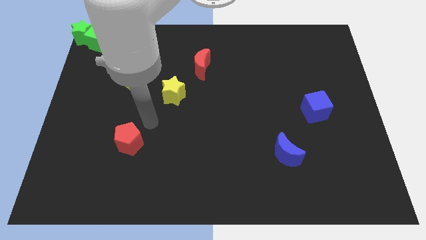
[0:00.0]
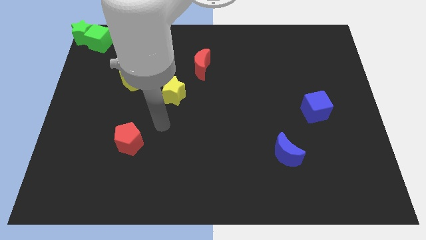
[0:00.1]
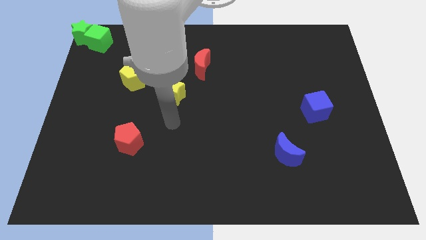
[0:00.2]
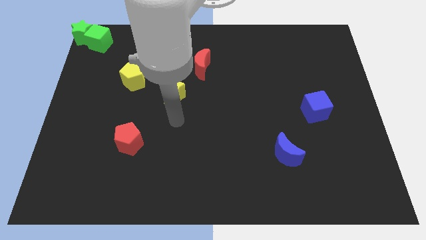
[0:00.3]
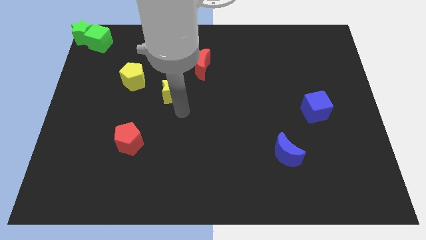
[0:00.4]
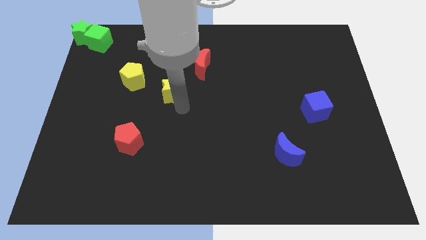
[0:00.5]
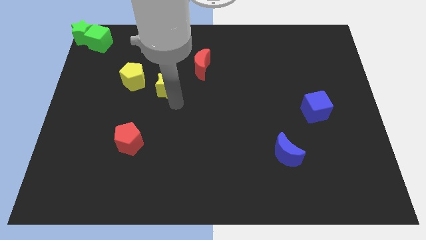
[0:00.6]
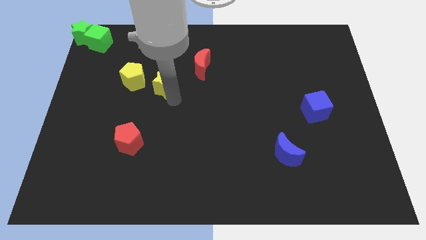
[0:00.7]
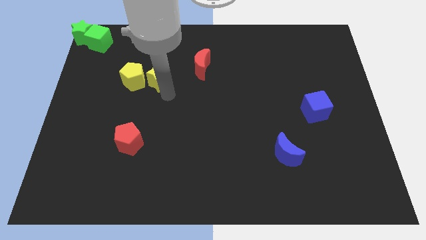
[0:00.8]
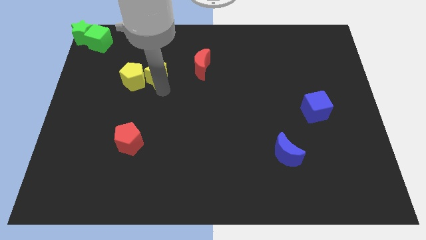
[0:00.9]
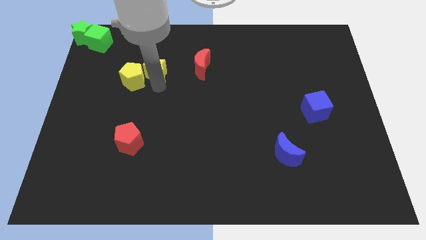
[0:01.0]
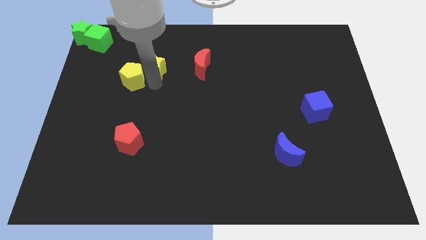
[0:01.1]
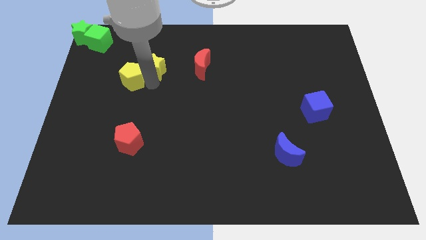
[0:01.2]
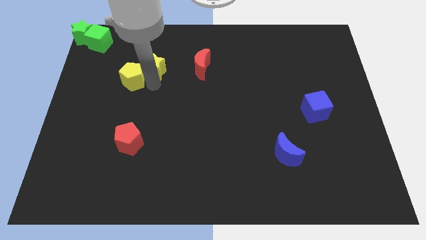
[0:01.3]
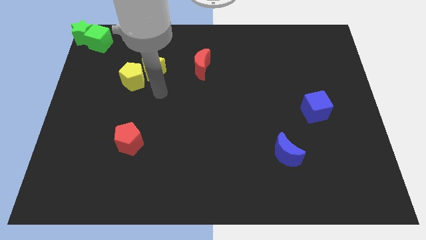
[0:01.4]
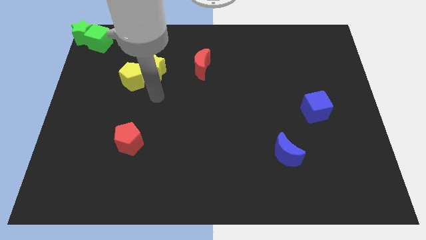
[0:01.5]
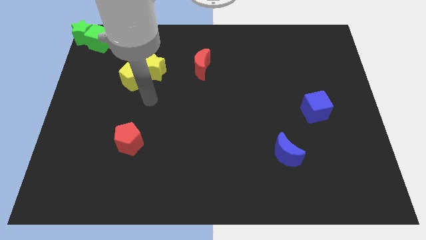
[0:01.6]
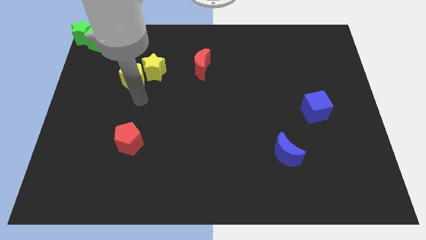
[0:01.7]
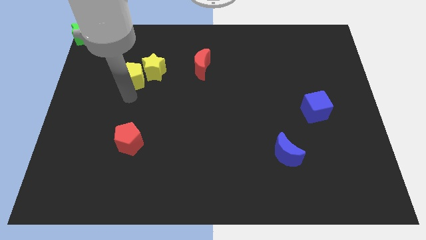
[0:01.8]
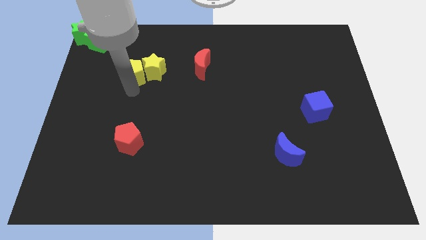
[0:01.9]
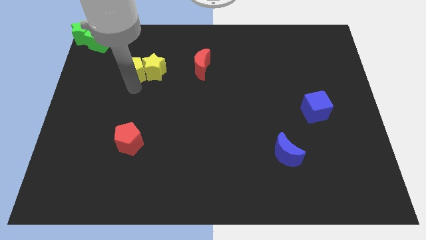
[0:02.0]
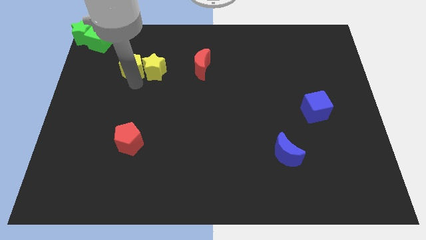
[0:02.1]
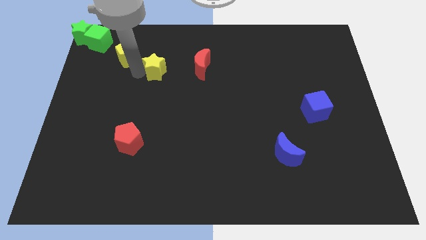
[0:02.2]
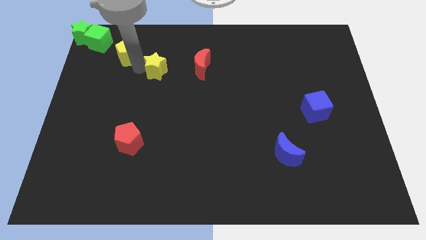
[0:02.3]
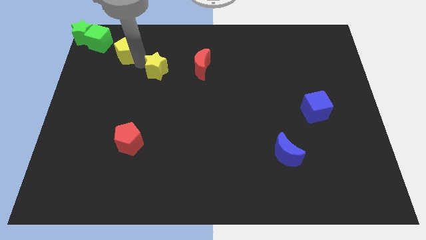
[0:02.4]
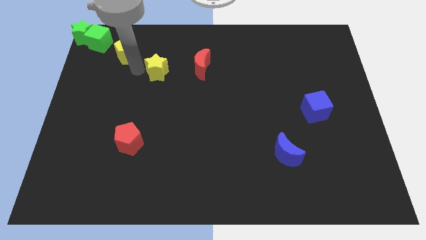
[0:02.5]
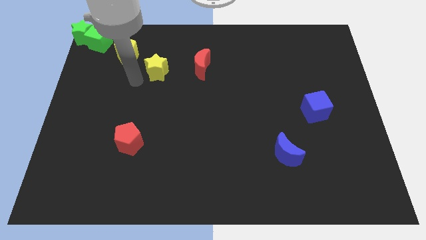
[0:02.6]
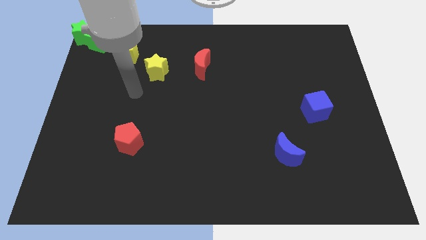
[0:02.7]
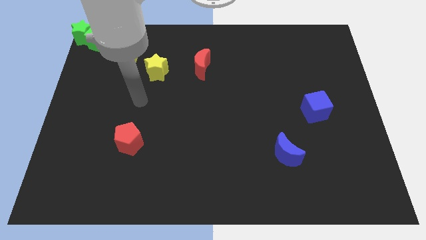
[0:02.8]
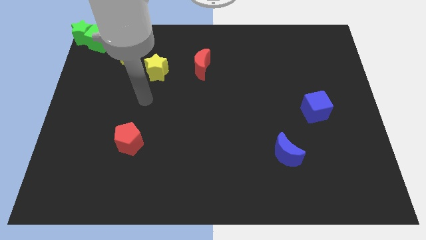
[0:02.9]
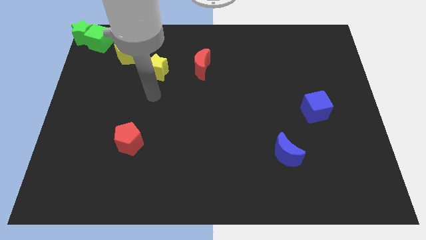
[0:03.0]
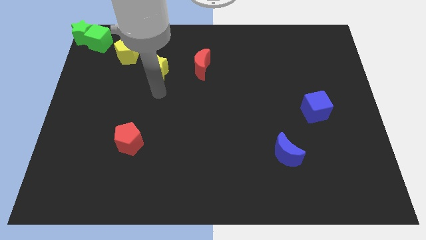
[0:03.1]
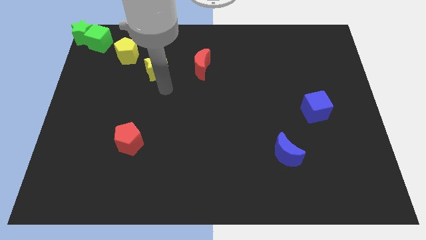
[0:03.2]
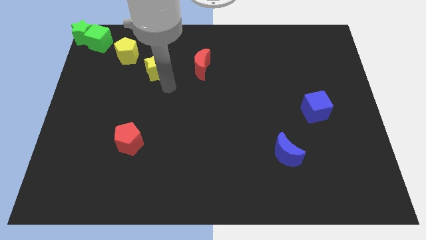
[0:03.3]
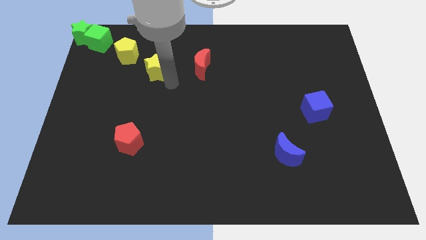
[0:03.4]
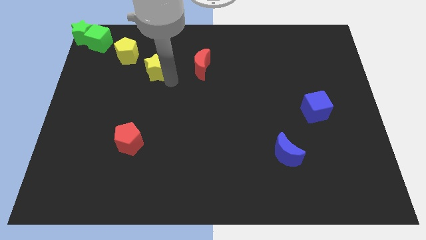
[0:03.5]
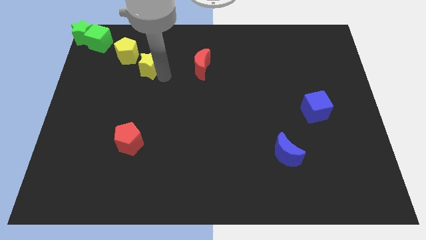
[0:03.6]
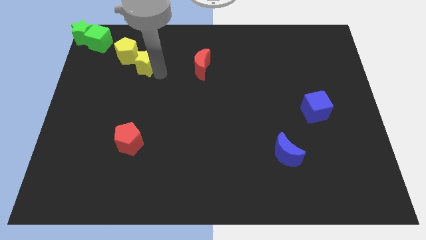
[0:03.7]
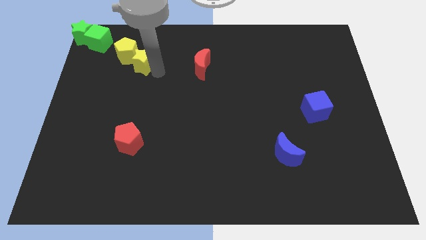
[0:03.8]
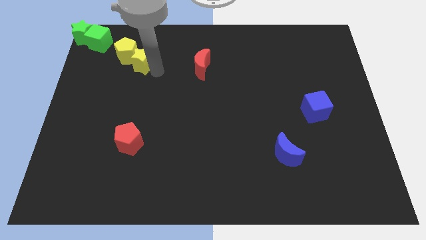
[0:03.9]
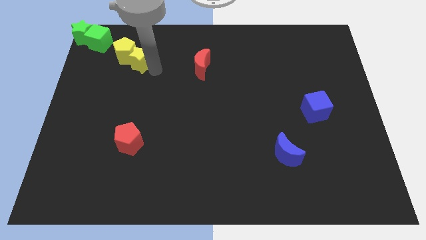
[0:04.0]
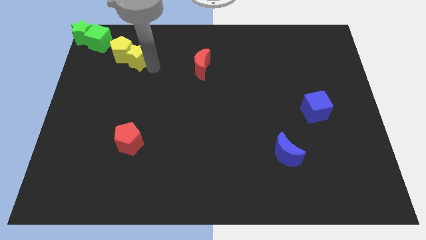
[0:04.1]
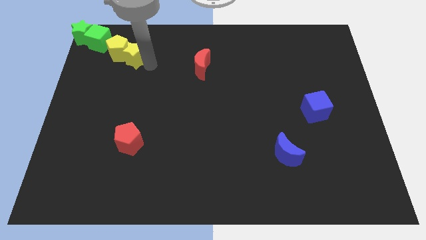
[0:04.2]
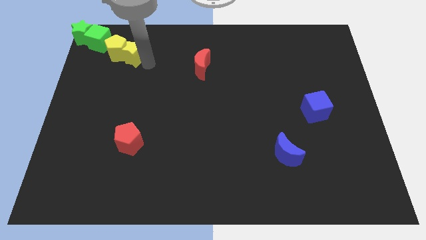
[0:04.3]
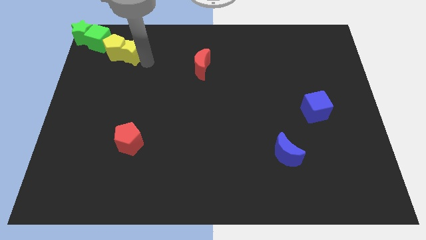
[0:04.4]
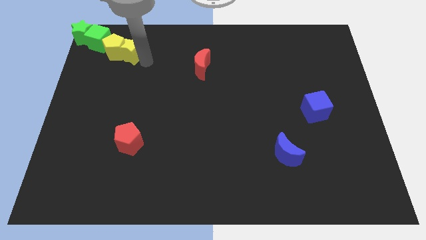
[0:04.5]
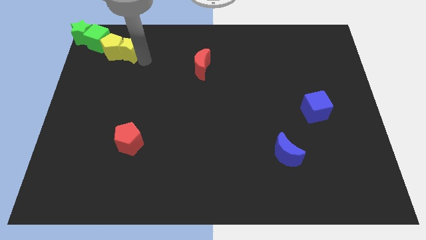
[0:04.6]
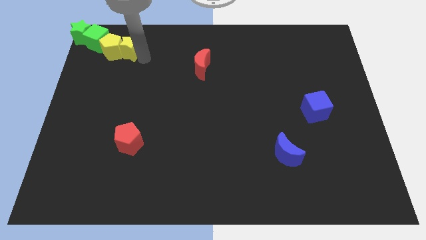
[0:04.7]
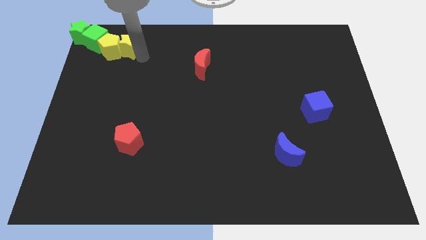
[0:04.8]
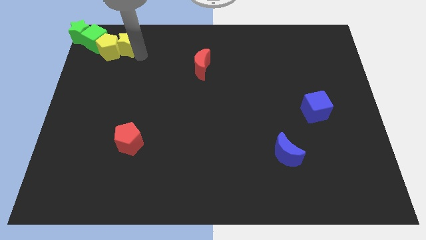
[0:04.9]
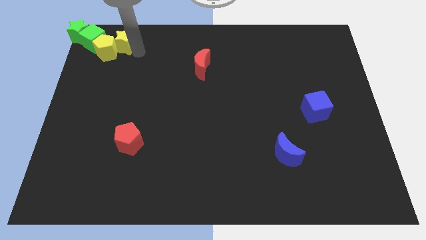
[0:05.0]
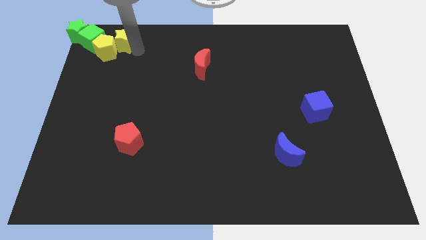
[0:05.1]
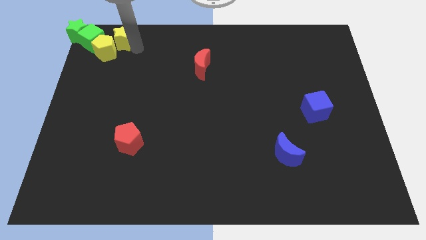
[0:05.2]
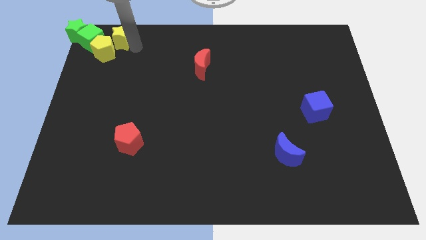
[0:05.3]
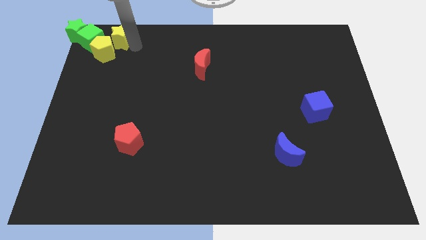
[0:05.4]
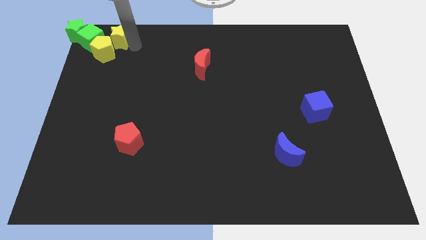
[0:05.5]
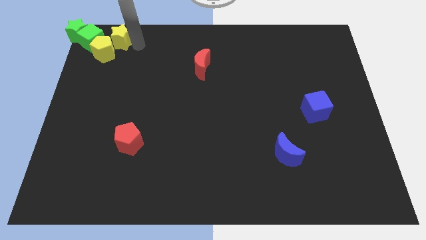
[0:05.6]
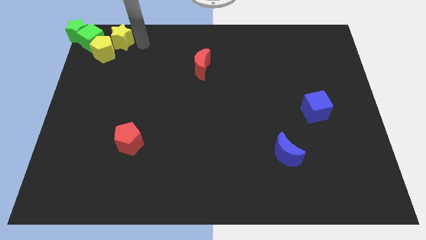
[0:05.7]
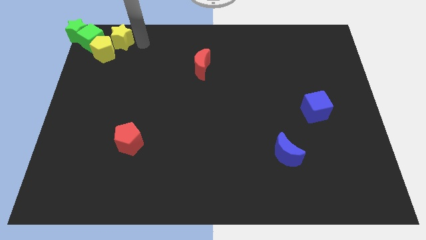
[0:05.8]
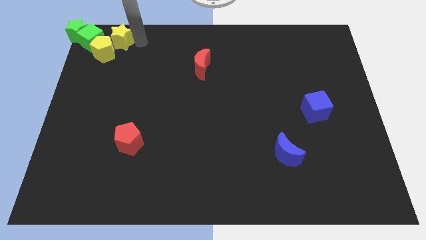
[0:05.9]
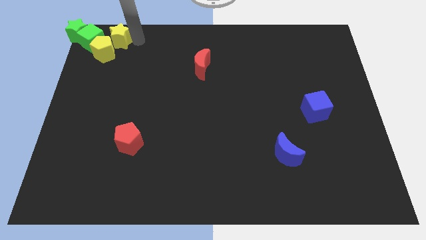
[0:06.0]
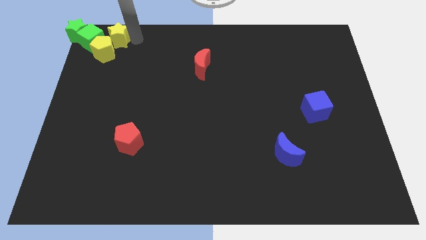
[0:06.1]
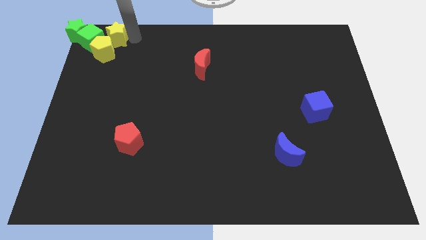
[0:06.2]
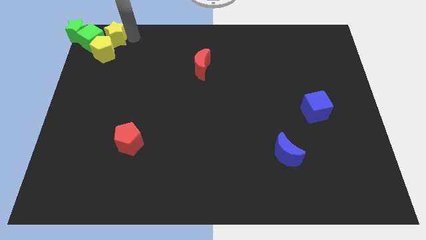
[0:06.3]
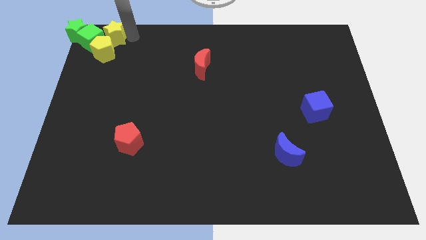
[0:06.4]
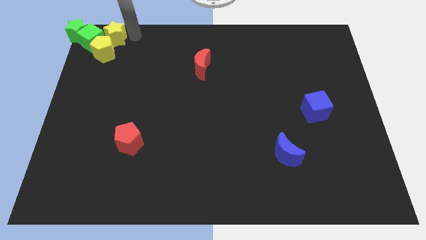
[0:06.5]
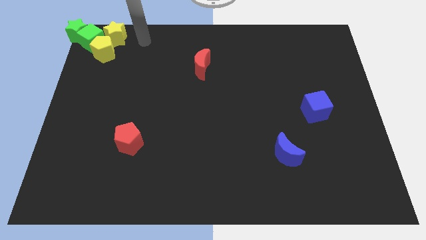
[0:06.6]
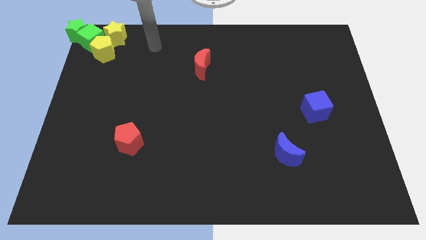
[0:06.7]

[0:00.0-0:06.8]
push the yellow star and yellow pentagon to the top left corner together

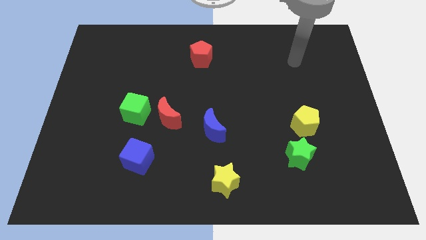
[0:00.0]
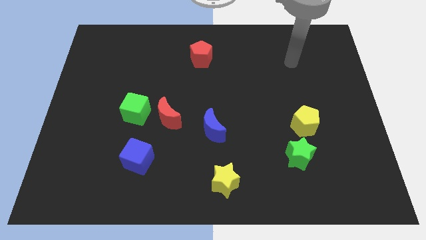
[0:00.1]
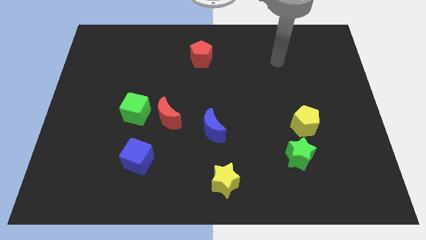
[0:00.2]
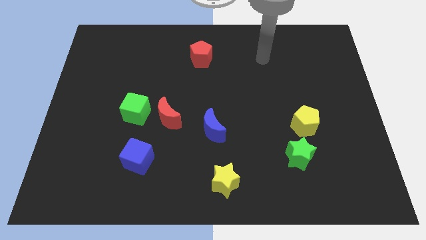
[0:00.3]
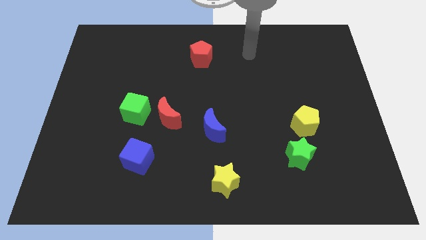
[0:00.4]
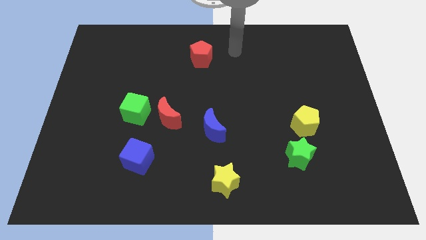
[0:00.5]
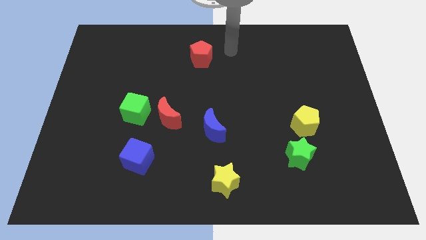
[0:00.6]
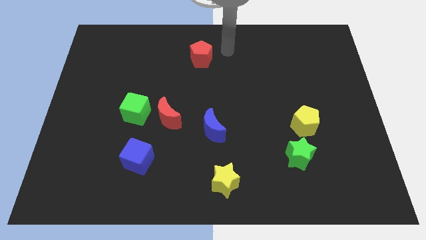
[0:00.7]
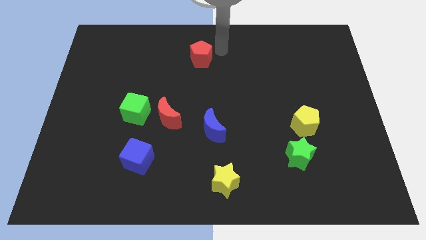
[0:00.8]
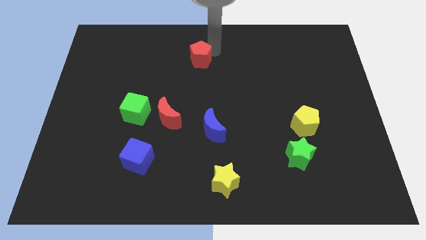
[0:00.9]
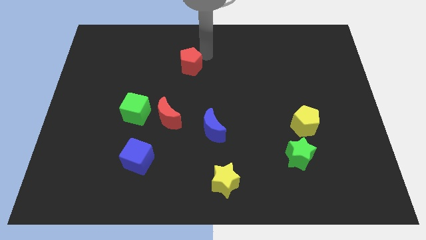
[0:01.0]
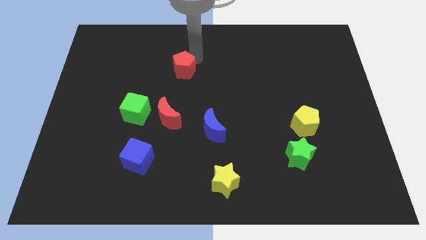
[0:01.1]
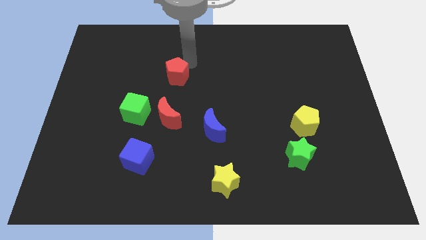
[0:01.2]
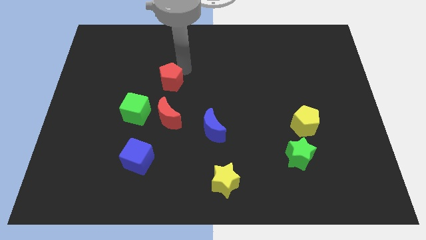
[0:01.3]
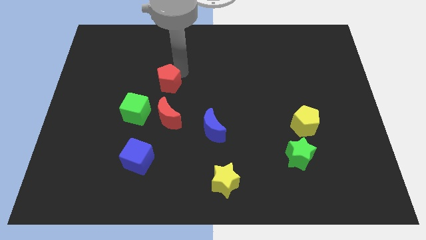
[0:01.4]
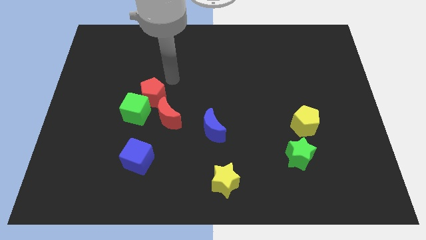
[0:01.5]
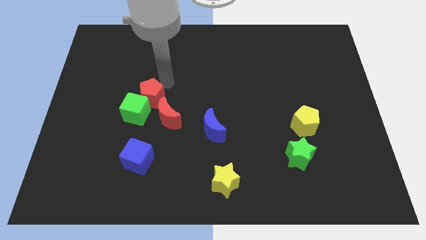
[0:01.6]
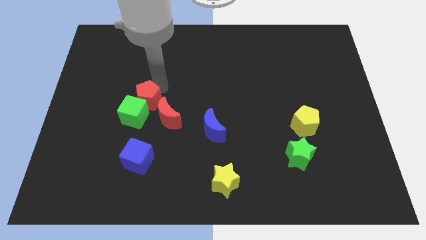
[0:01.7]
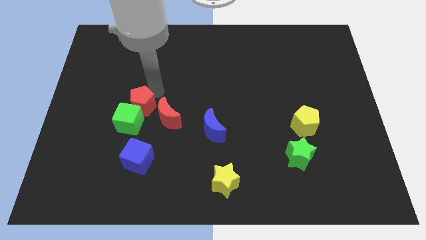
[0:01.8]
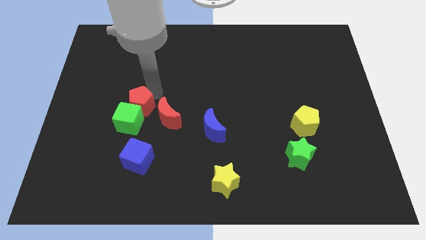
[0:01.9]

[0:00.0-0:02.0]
push red pentagon into the green cube

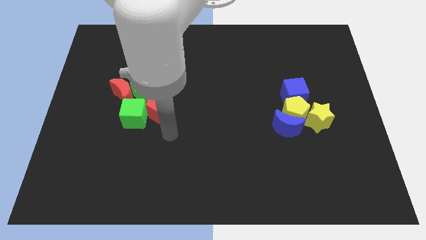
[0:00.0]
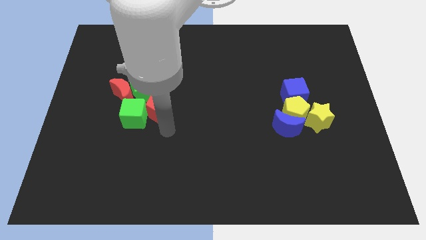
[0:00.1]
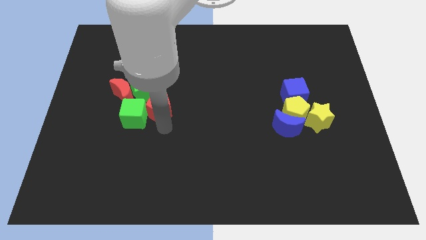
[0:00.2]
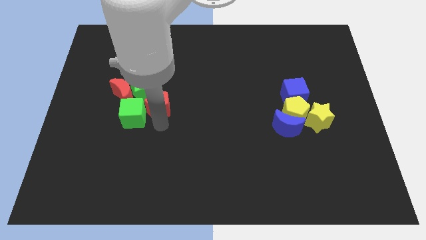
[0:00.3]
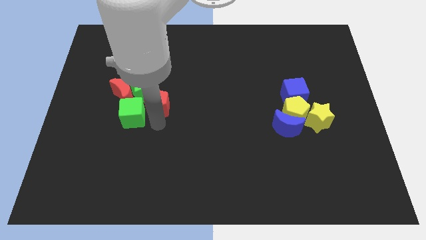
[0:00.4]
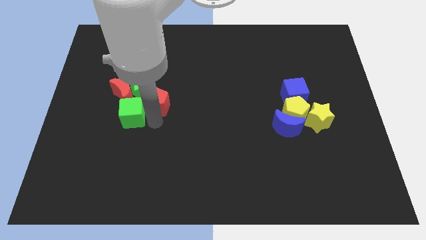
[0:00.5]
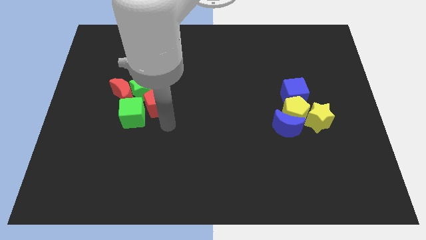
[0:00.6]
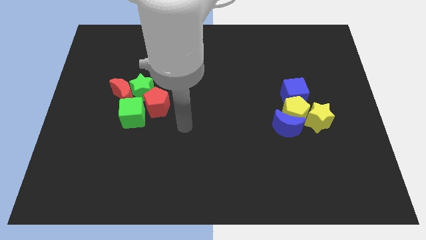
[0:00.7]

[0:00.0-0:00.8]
move the red pentagon into the green star
